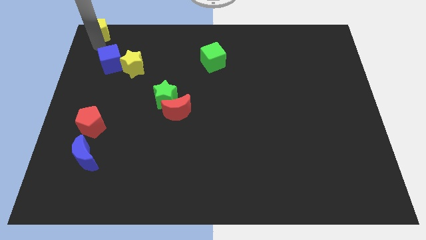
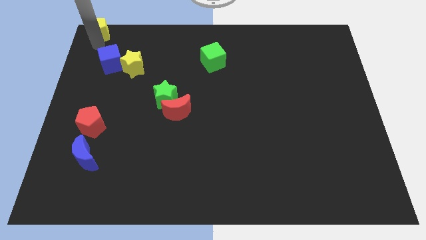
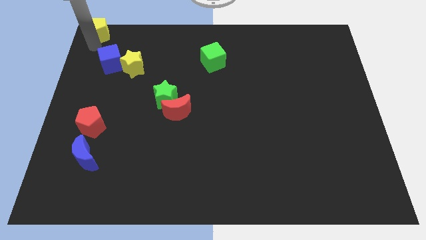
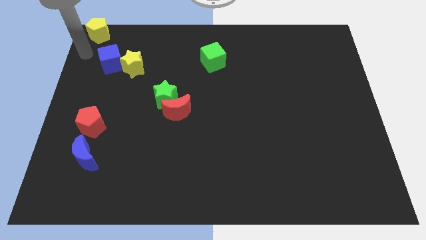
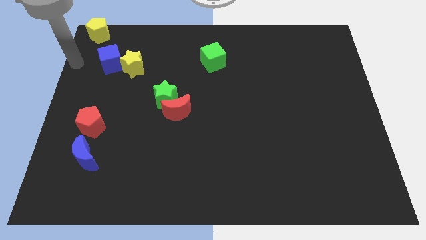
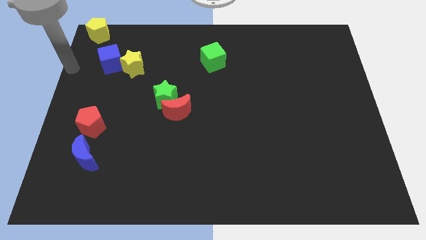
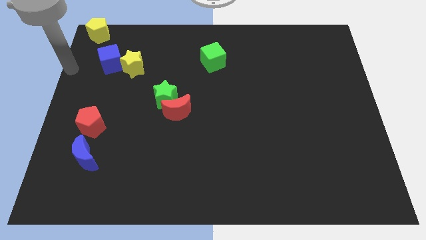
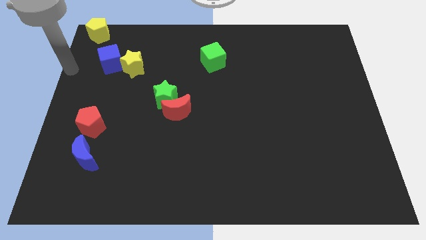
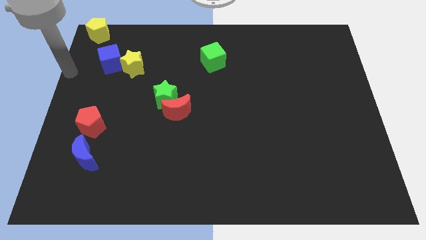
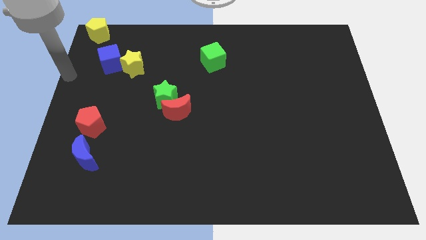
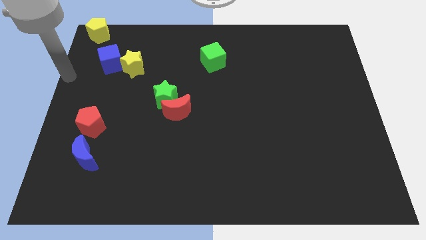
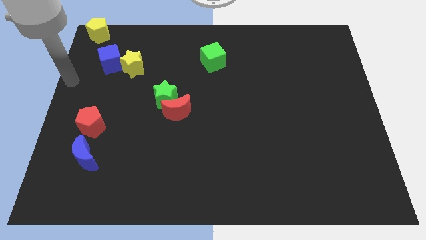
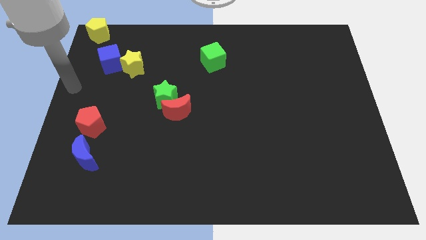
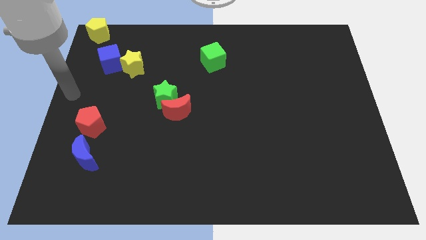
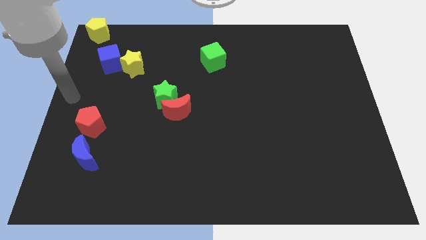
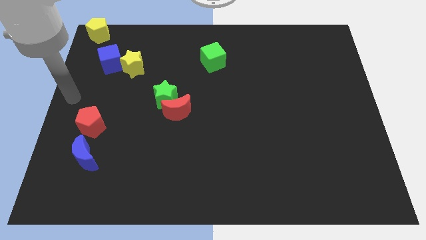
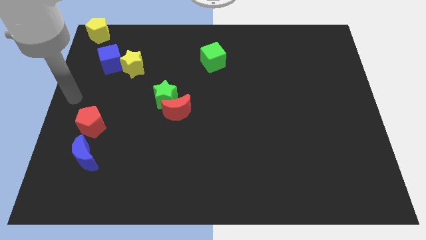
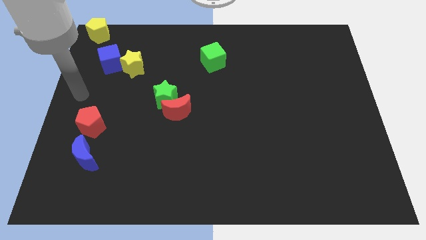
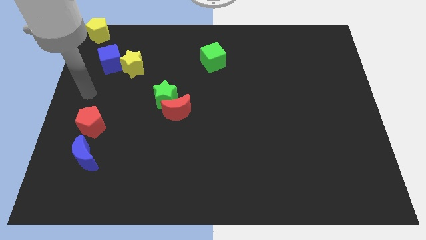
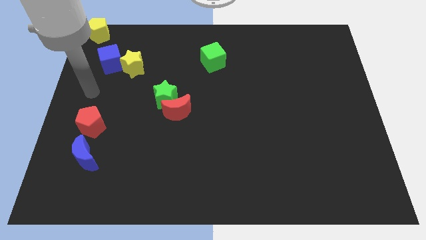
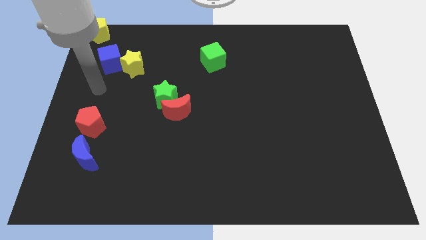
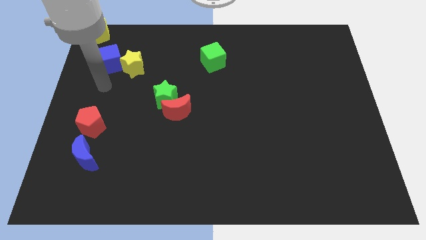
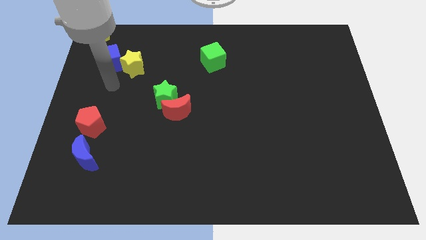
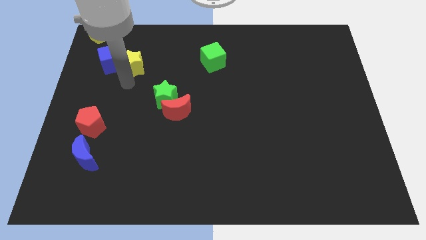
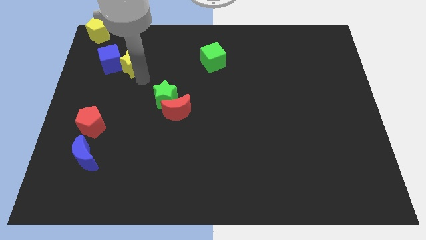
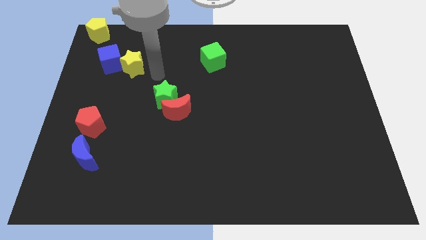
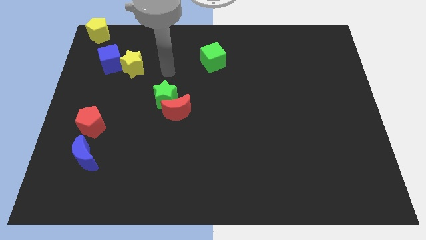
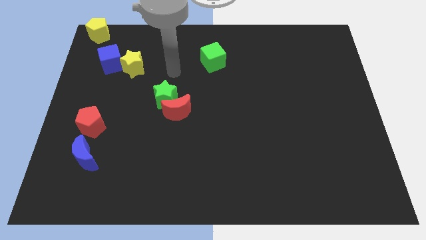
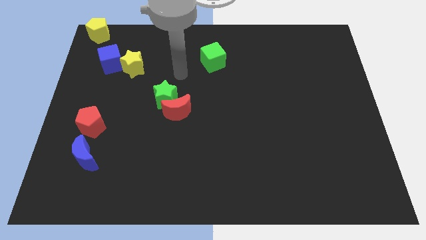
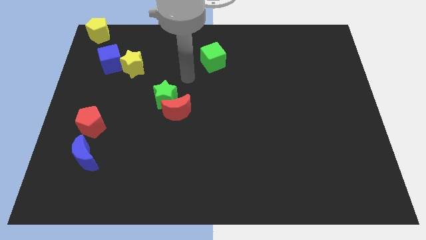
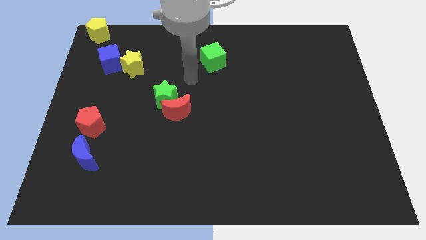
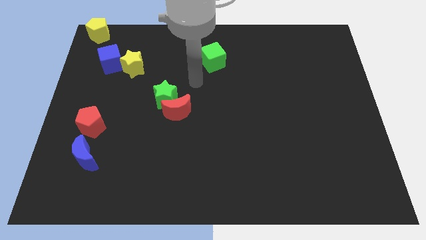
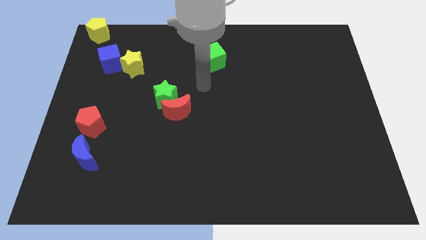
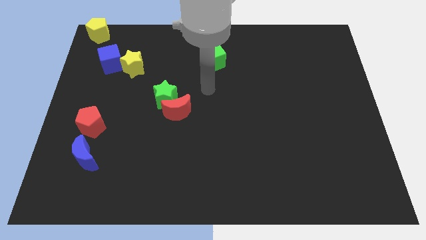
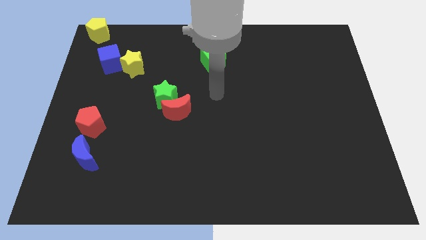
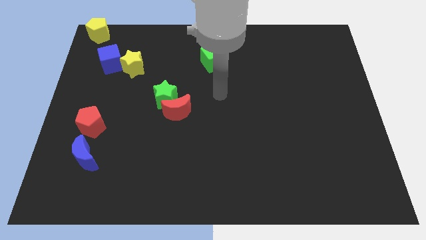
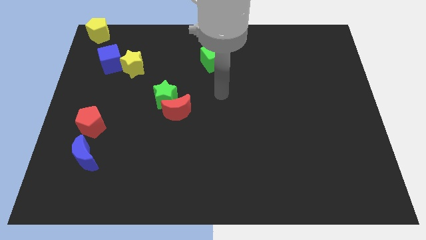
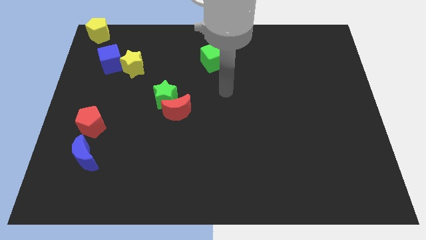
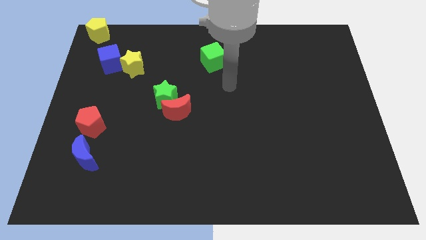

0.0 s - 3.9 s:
move your arm away from the yellow pentagon

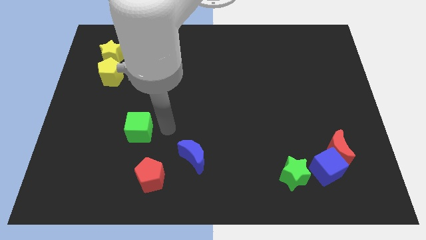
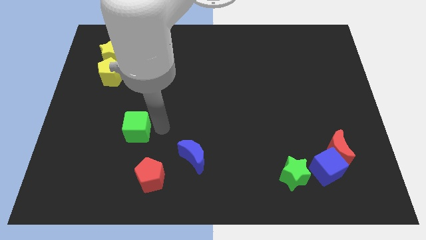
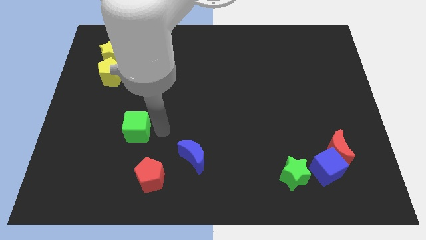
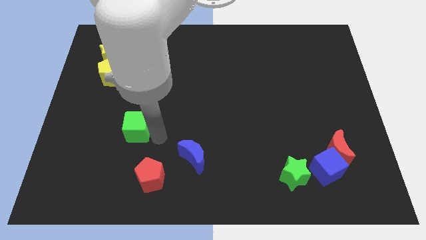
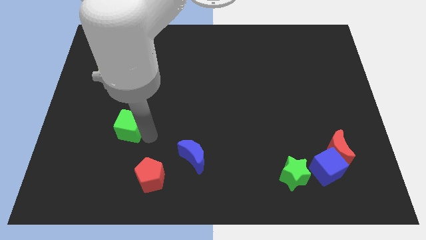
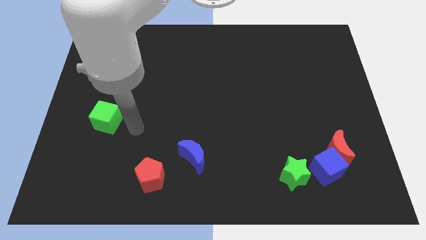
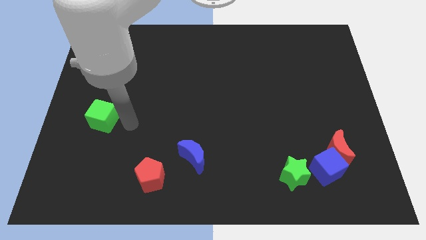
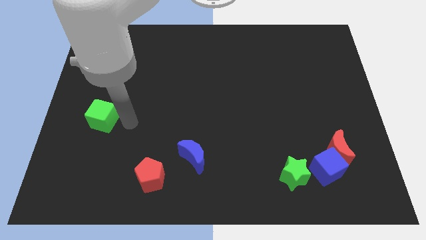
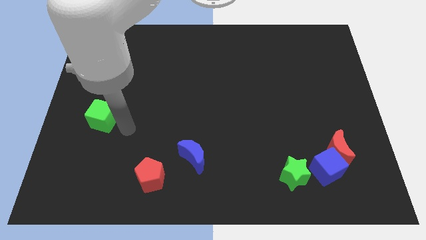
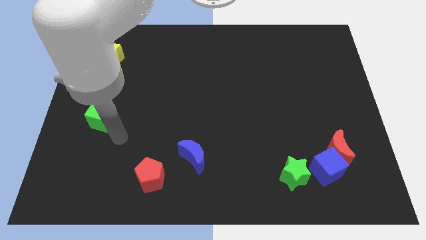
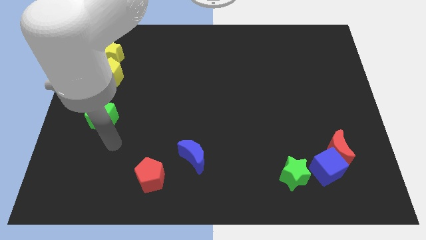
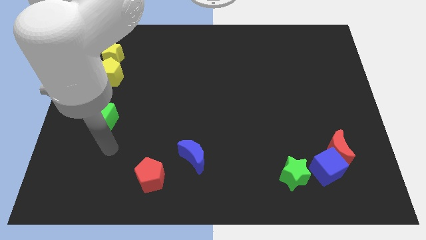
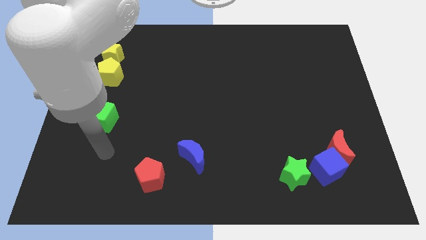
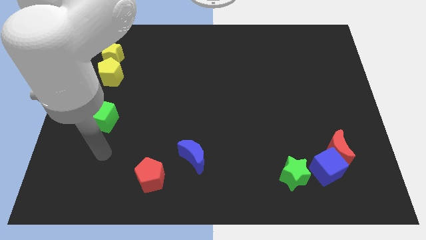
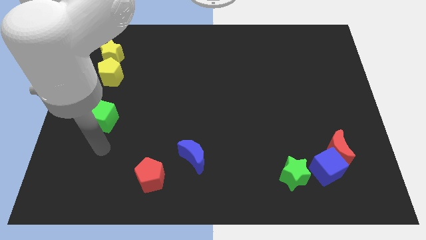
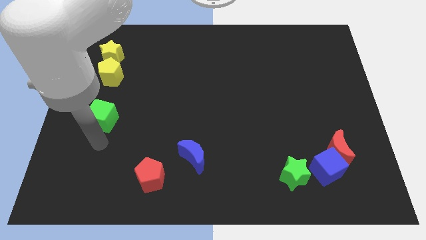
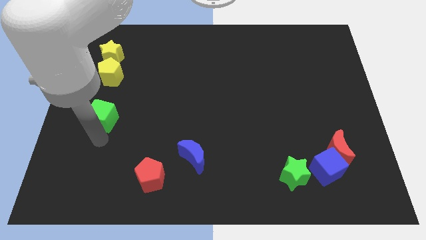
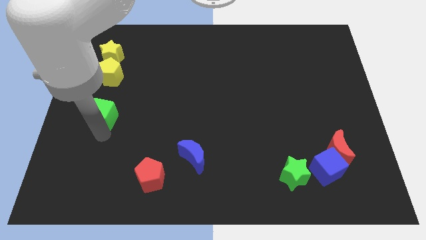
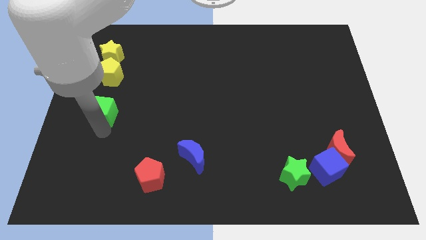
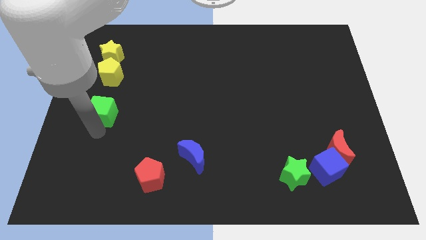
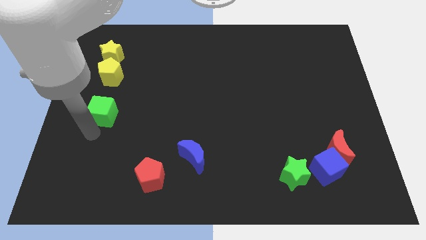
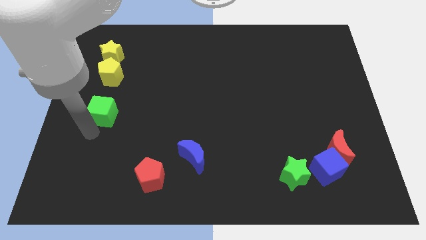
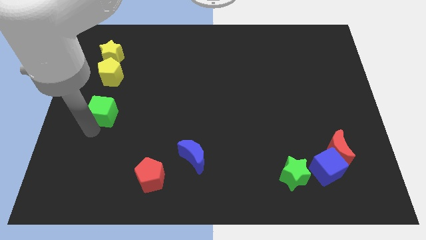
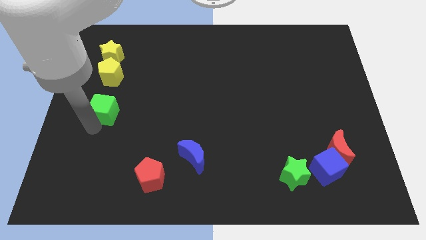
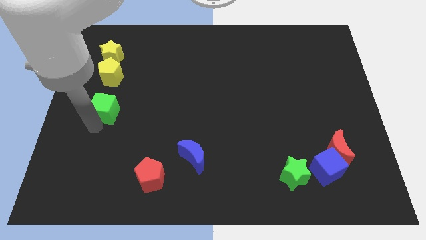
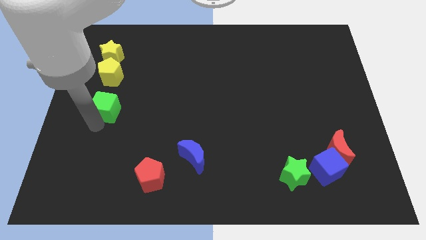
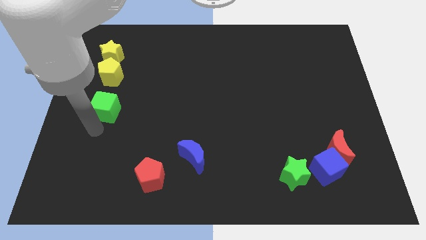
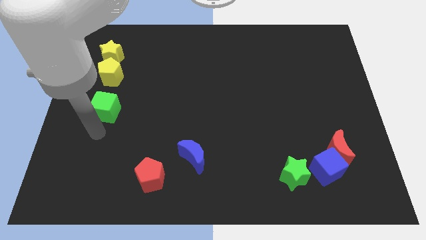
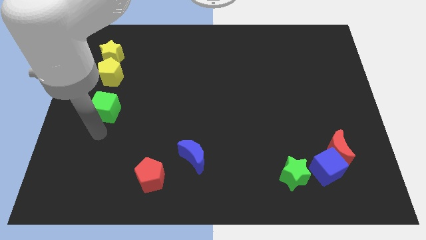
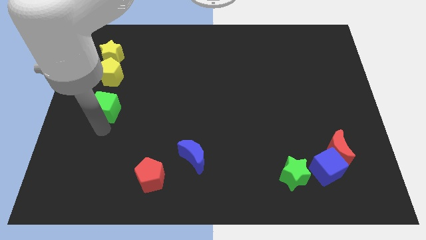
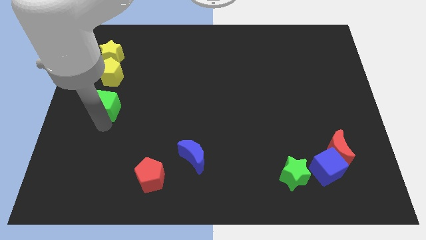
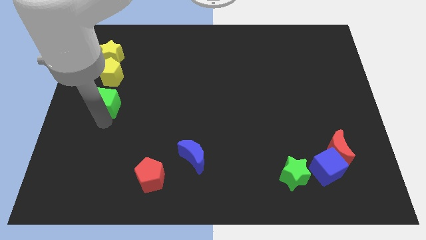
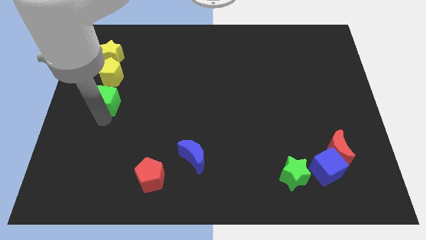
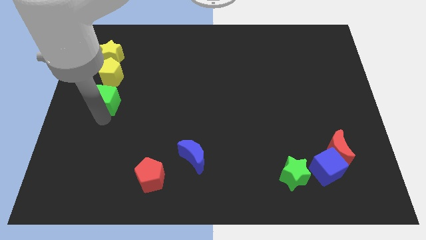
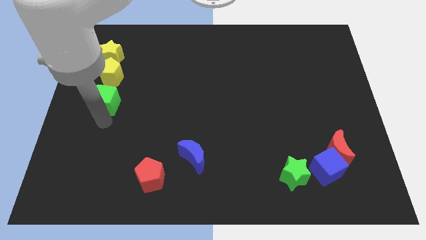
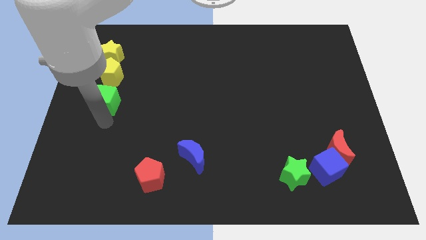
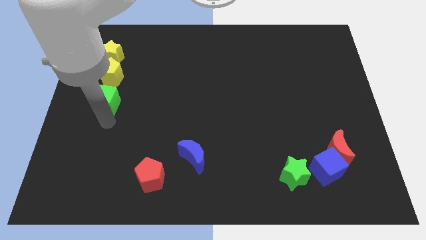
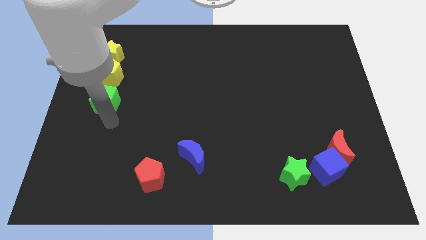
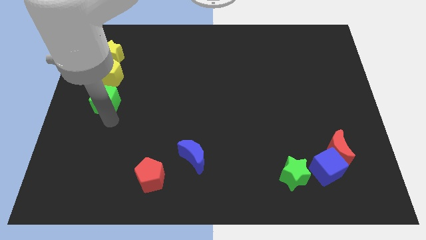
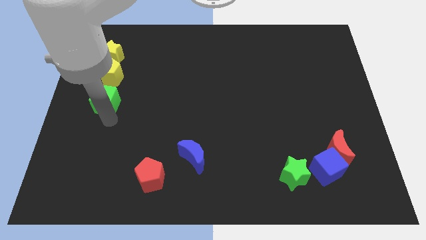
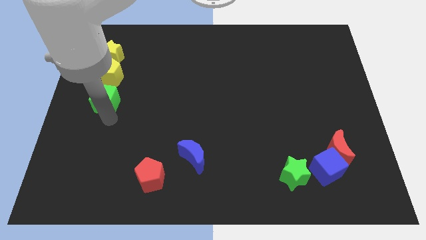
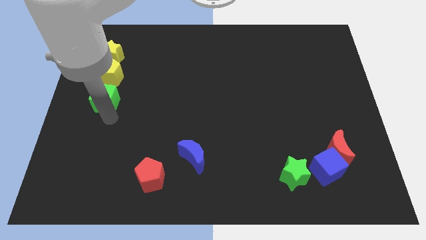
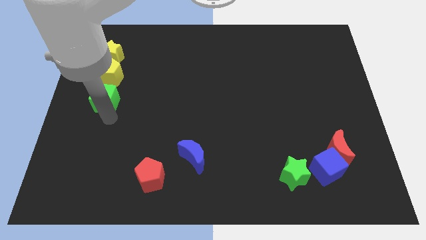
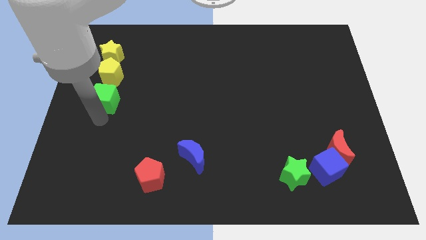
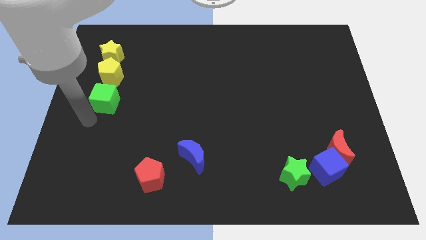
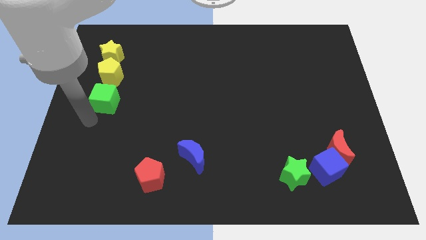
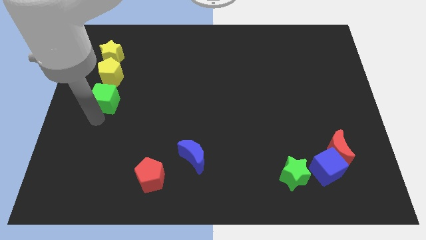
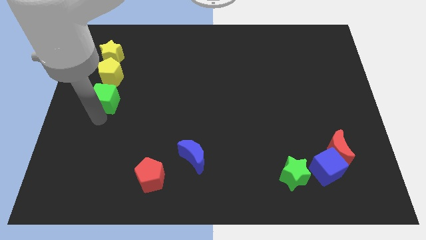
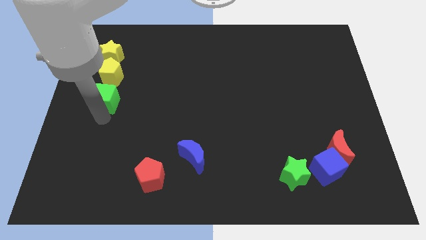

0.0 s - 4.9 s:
push the green cube to the bottom of the yellow pentagon

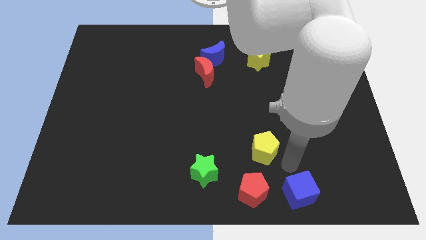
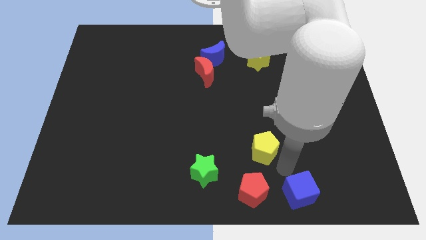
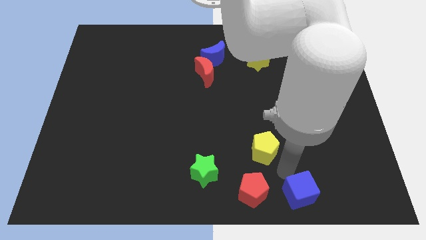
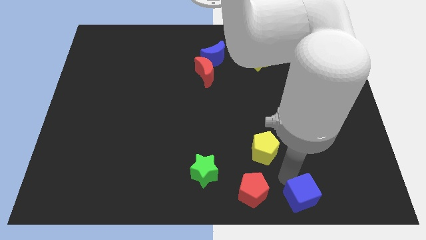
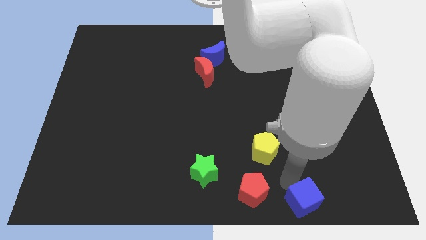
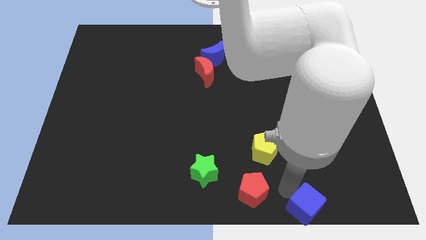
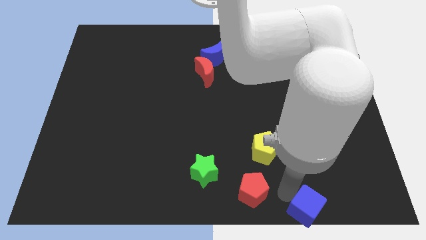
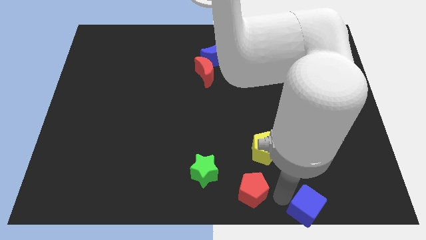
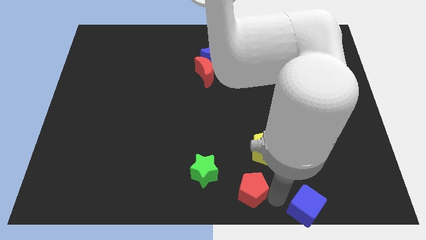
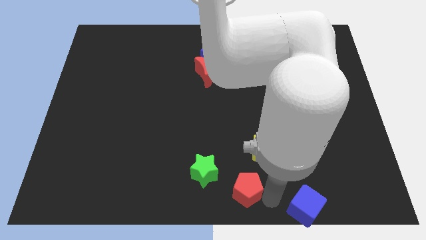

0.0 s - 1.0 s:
slightly push the blue cube towards the bottom right of the board
